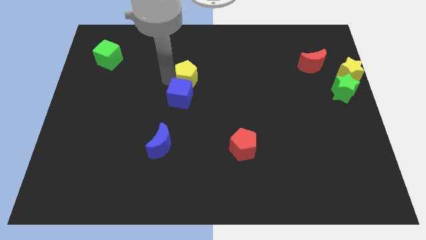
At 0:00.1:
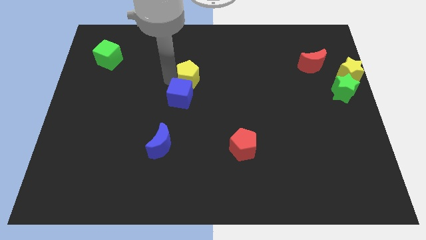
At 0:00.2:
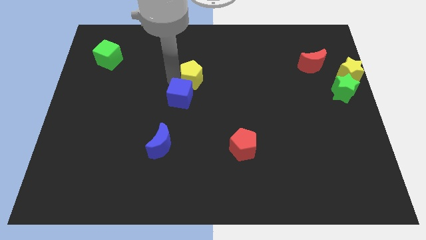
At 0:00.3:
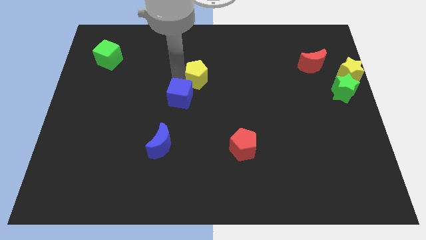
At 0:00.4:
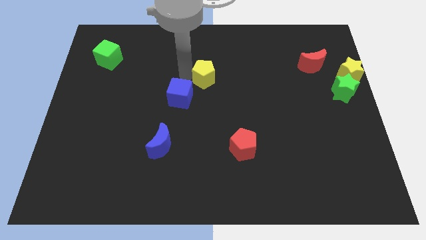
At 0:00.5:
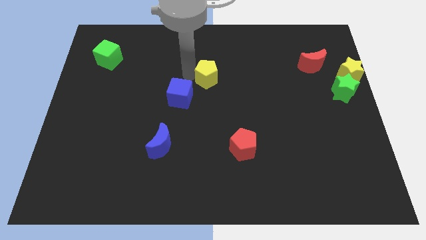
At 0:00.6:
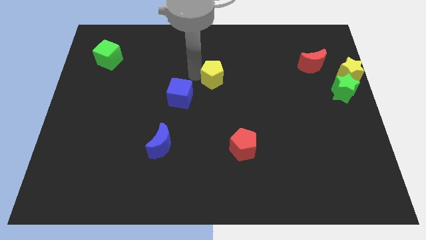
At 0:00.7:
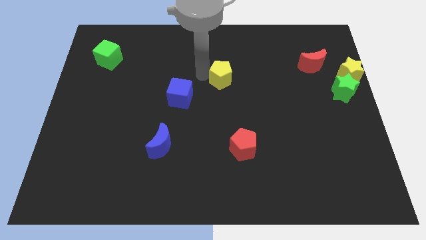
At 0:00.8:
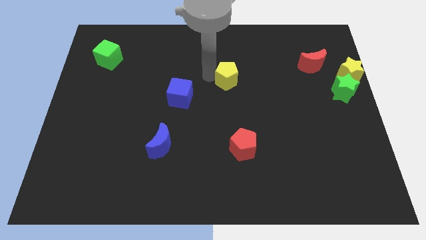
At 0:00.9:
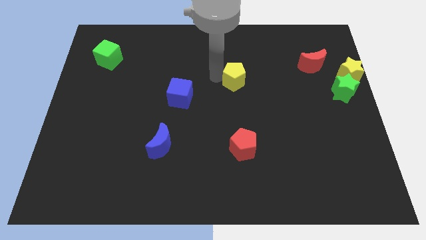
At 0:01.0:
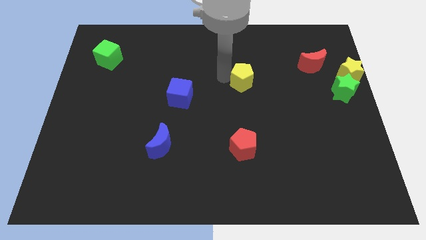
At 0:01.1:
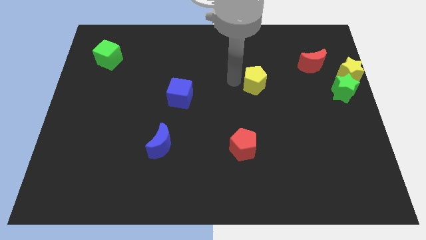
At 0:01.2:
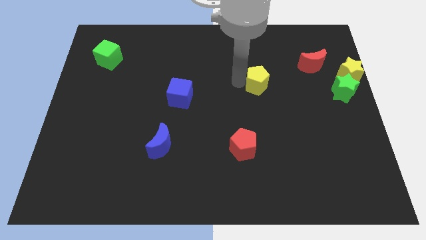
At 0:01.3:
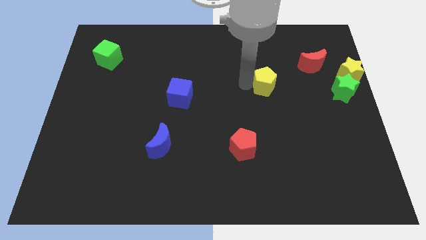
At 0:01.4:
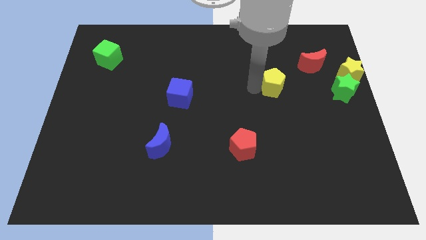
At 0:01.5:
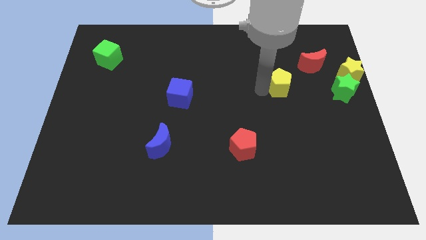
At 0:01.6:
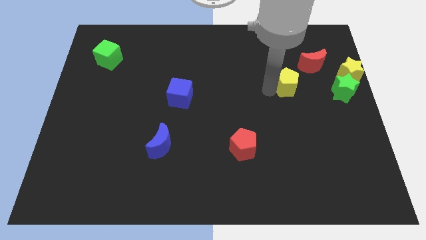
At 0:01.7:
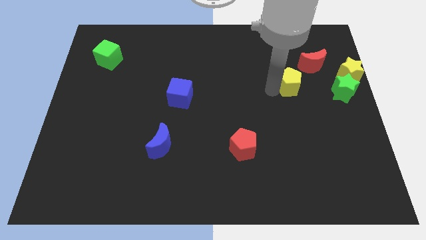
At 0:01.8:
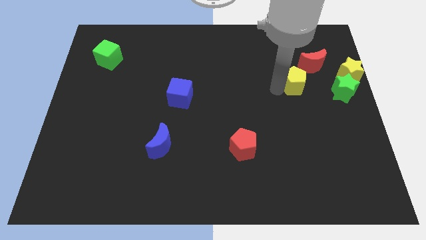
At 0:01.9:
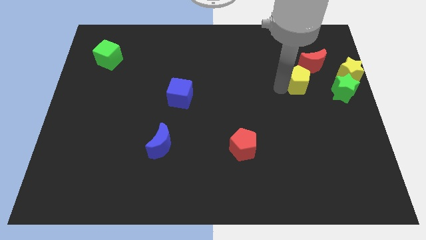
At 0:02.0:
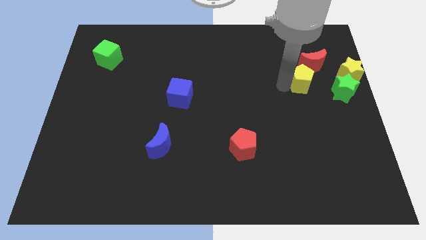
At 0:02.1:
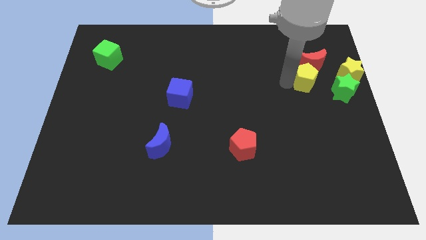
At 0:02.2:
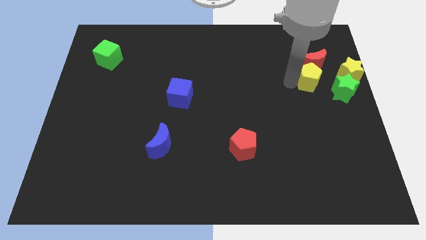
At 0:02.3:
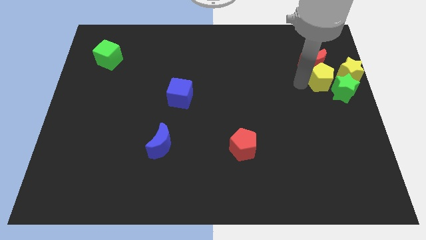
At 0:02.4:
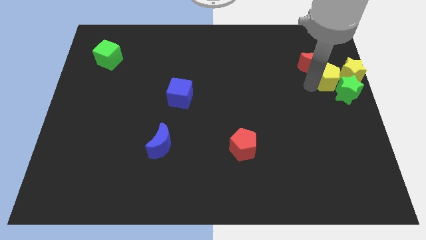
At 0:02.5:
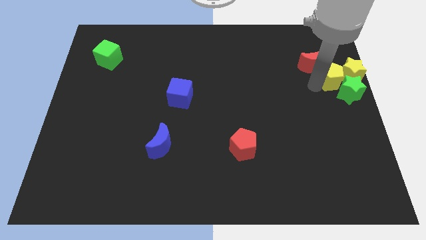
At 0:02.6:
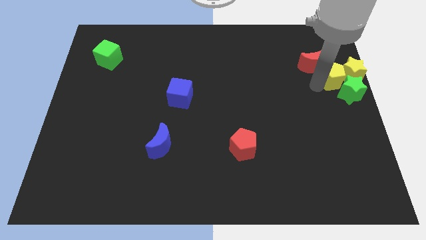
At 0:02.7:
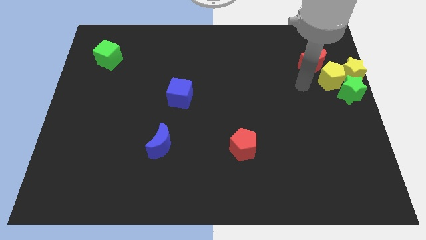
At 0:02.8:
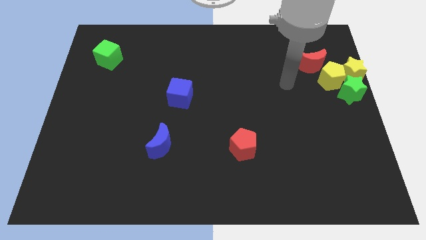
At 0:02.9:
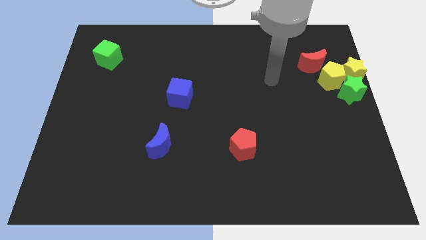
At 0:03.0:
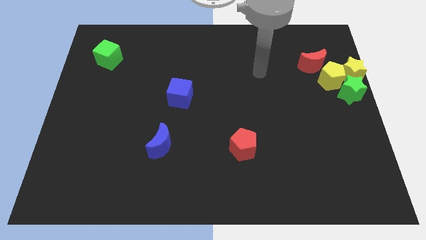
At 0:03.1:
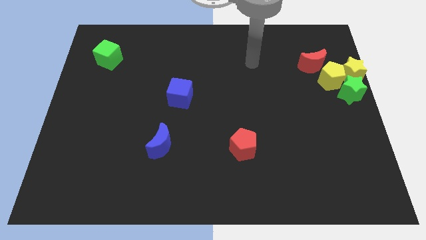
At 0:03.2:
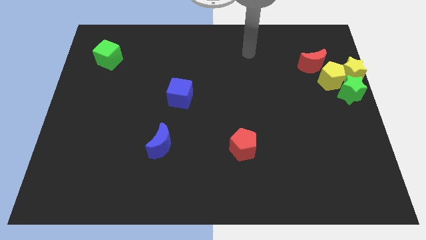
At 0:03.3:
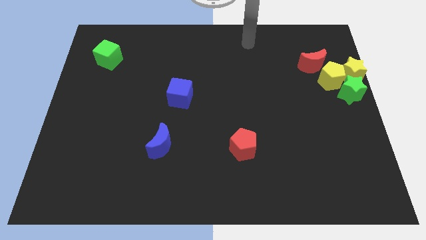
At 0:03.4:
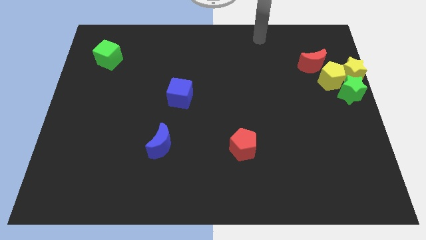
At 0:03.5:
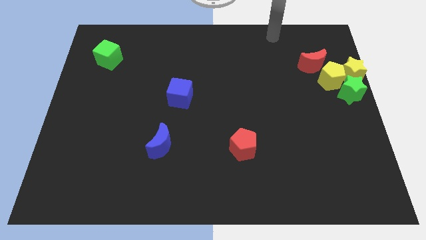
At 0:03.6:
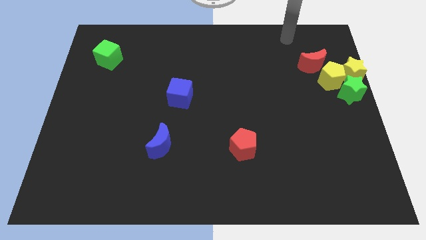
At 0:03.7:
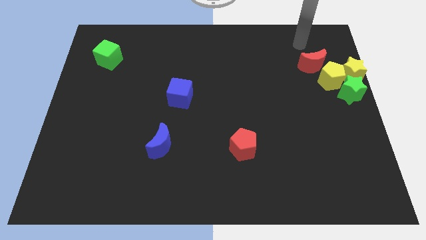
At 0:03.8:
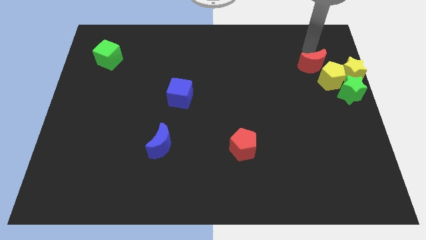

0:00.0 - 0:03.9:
push yellow star with the yellow pentagon

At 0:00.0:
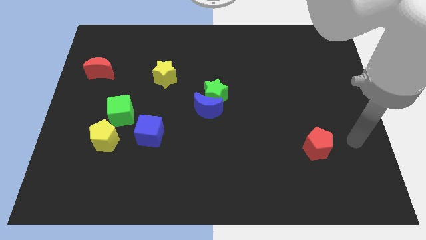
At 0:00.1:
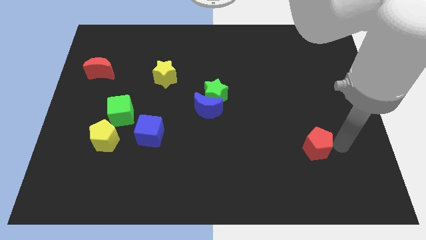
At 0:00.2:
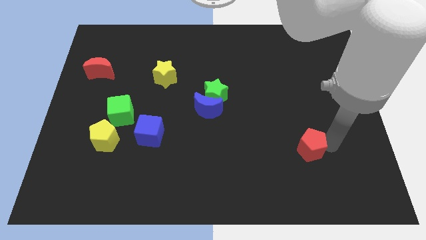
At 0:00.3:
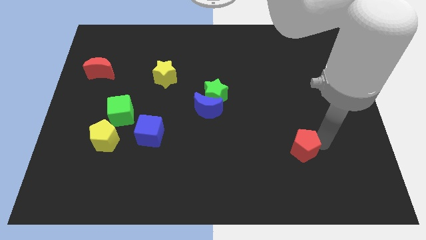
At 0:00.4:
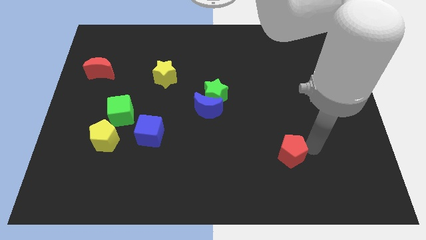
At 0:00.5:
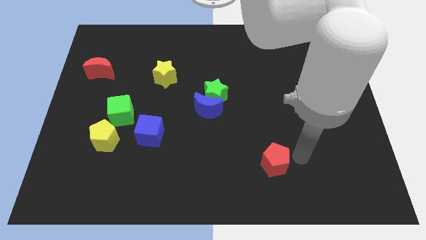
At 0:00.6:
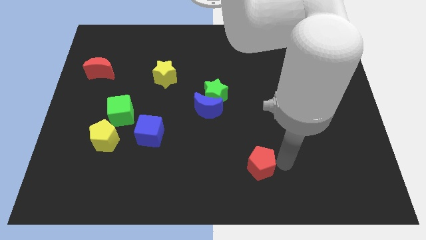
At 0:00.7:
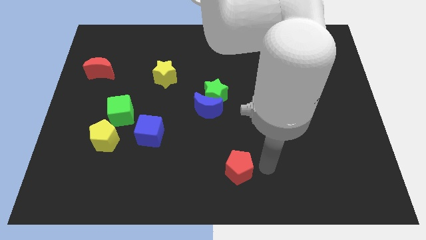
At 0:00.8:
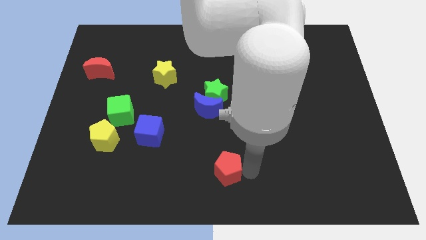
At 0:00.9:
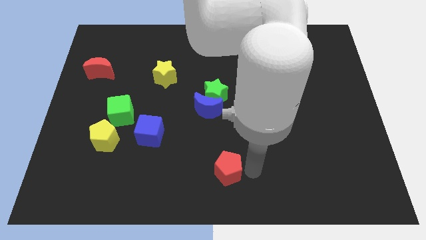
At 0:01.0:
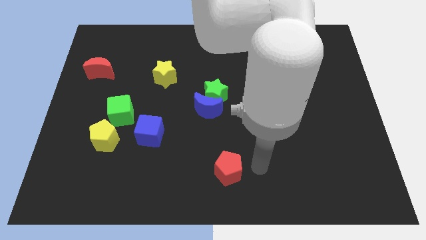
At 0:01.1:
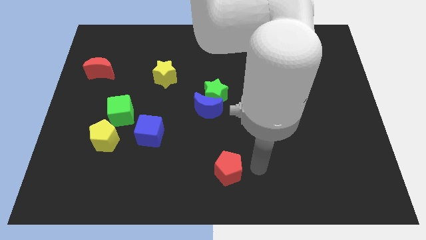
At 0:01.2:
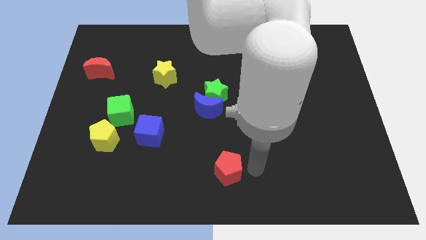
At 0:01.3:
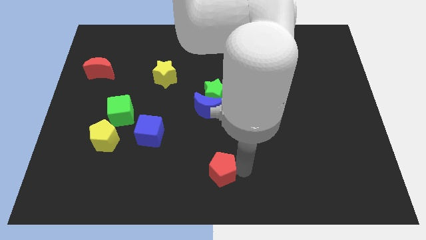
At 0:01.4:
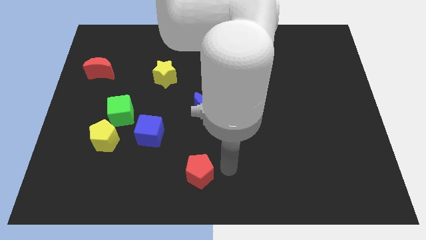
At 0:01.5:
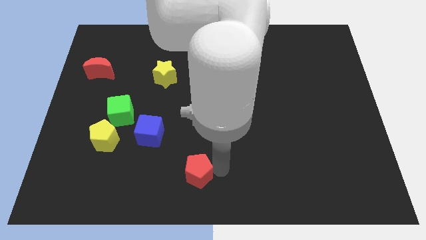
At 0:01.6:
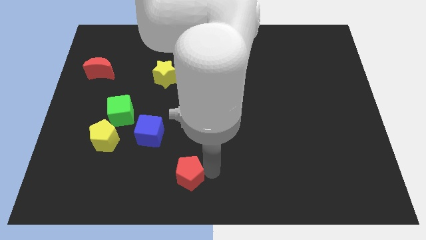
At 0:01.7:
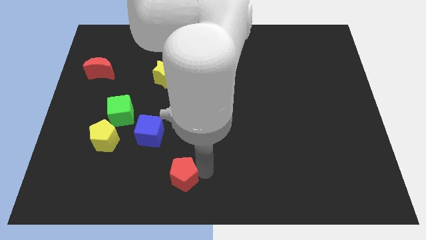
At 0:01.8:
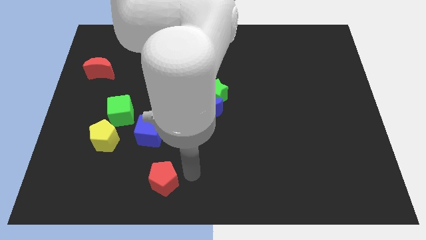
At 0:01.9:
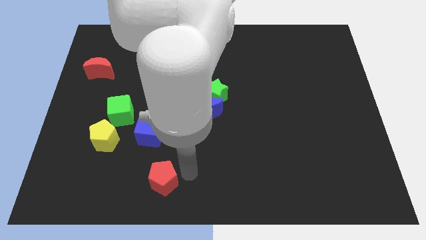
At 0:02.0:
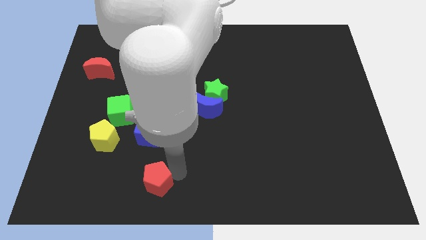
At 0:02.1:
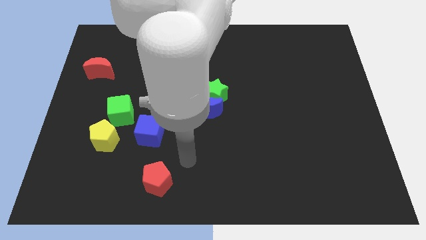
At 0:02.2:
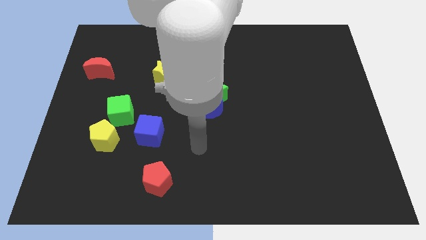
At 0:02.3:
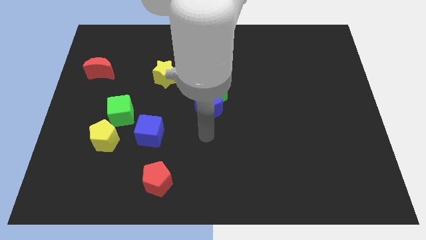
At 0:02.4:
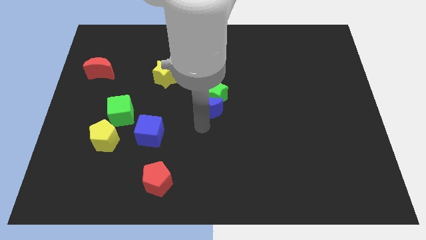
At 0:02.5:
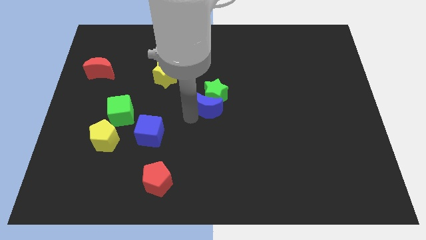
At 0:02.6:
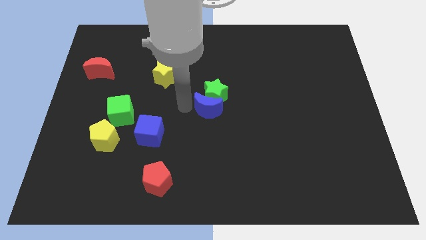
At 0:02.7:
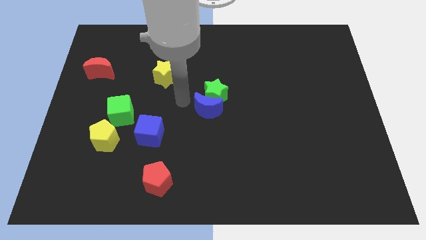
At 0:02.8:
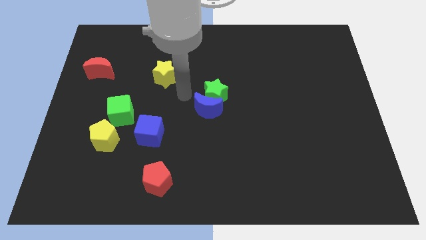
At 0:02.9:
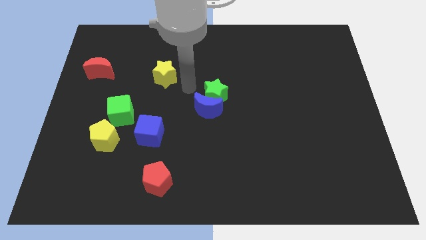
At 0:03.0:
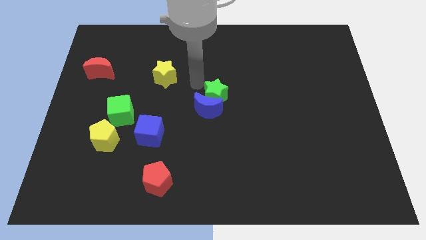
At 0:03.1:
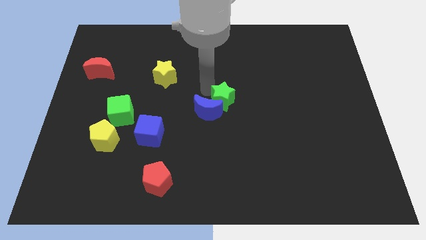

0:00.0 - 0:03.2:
slide the red pentagon to the bottom right side of the blue cube

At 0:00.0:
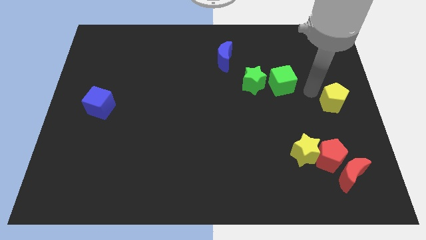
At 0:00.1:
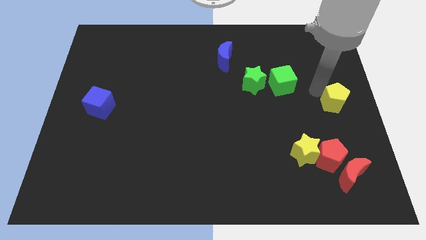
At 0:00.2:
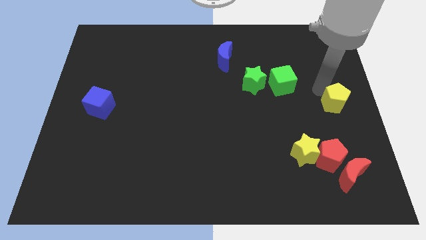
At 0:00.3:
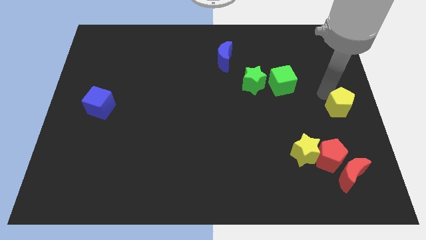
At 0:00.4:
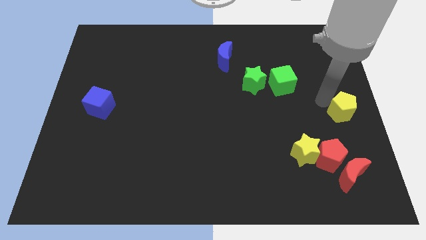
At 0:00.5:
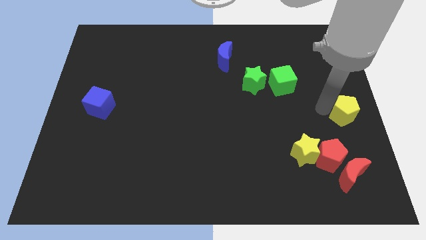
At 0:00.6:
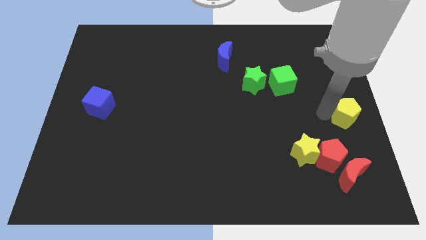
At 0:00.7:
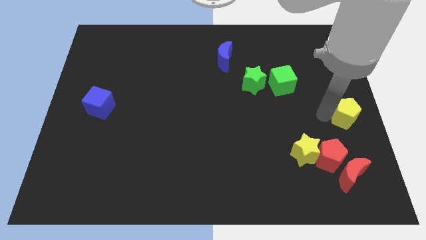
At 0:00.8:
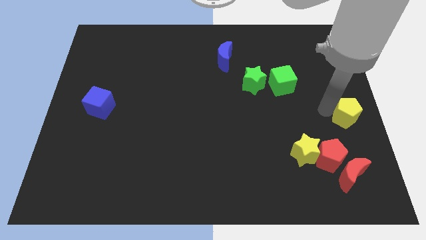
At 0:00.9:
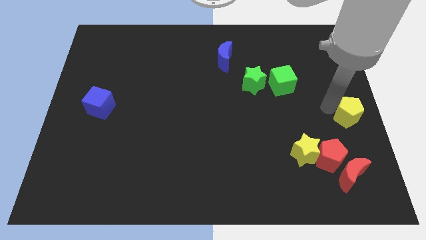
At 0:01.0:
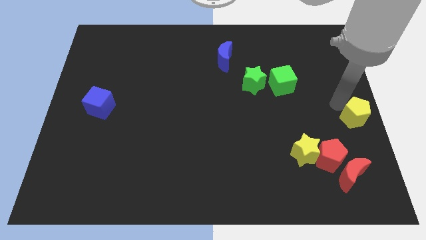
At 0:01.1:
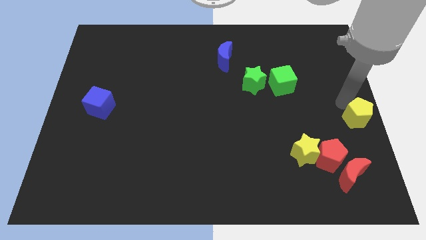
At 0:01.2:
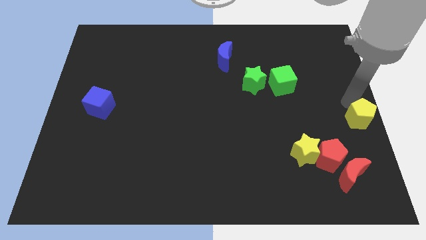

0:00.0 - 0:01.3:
place the yellow pentagon vertically above the red moon

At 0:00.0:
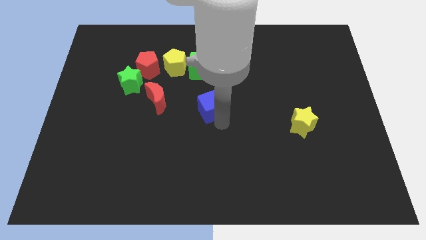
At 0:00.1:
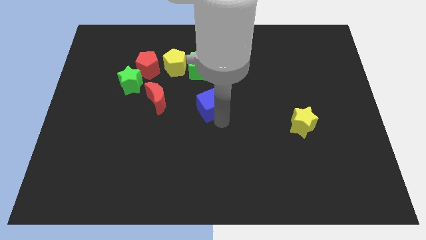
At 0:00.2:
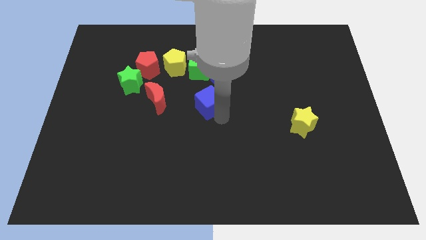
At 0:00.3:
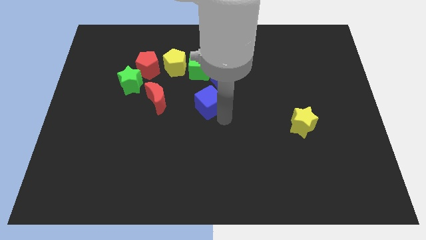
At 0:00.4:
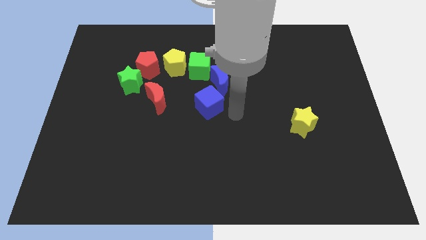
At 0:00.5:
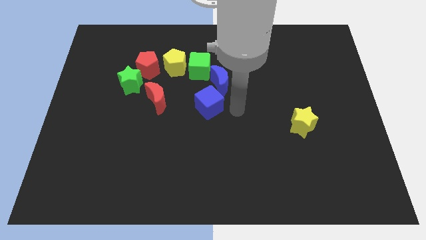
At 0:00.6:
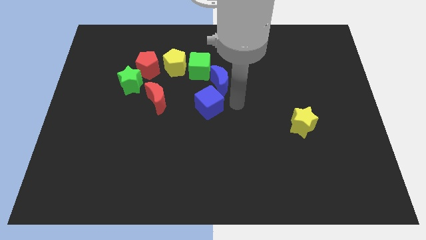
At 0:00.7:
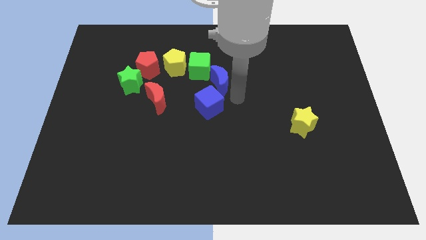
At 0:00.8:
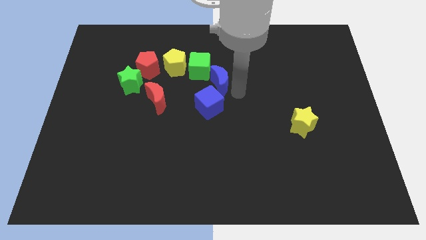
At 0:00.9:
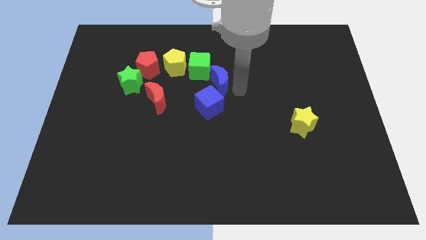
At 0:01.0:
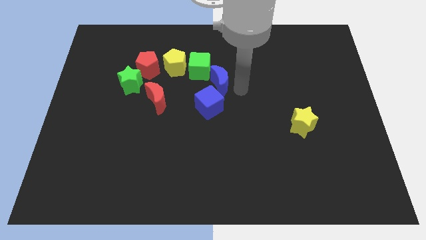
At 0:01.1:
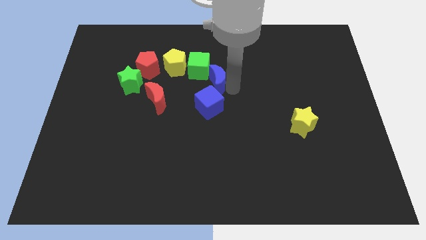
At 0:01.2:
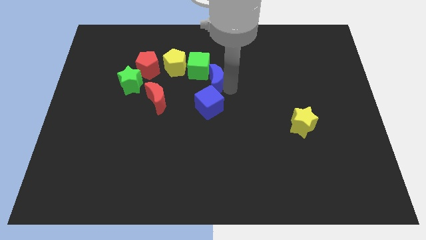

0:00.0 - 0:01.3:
push blue cube to the bottom of blue crescent
